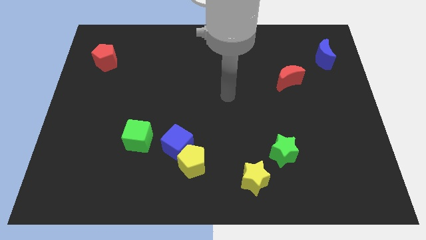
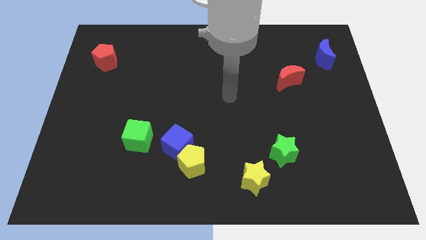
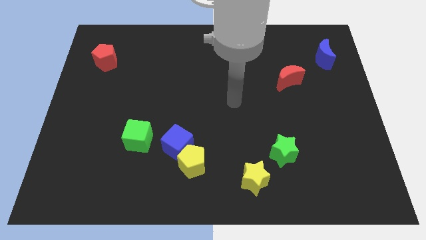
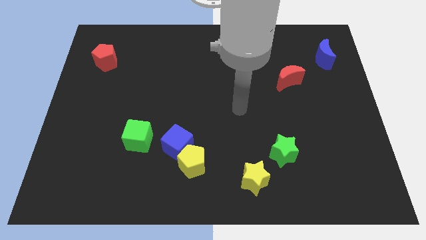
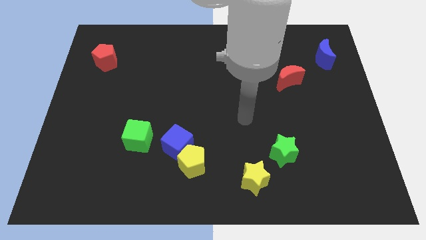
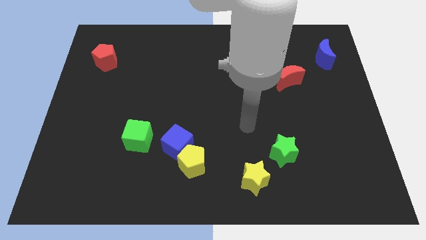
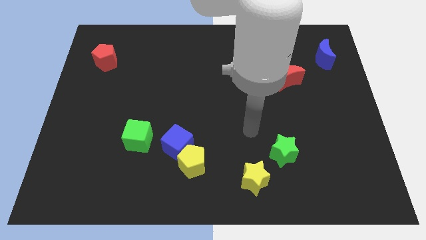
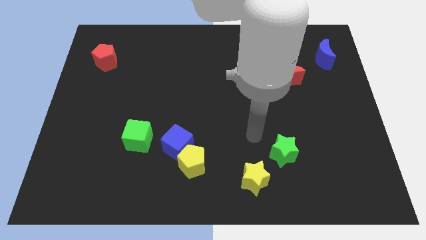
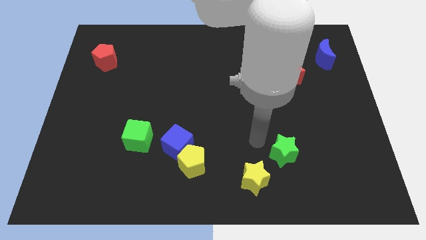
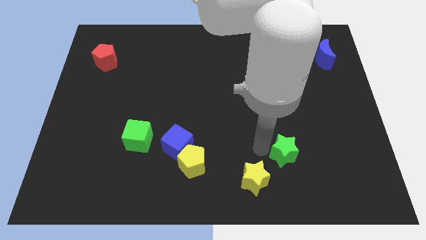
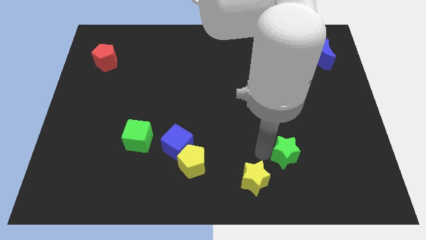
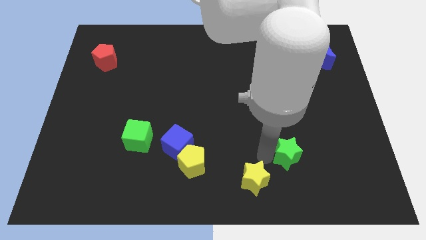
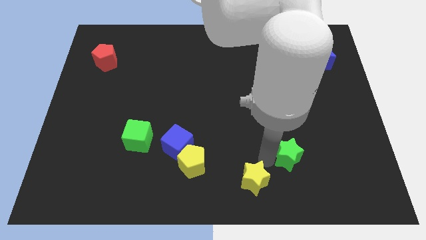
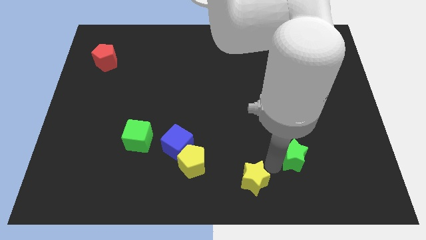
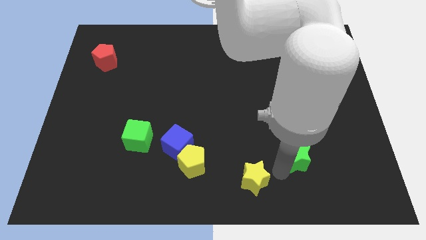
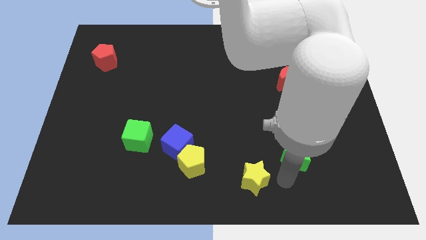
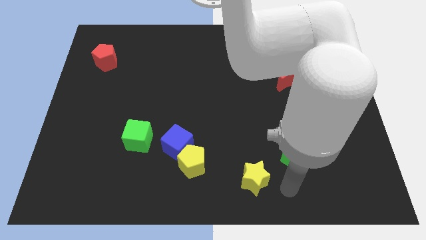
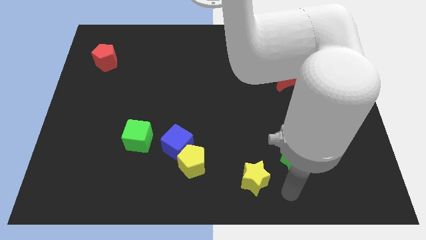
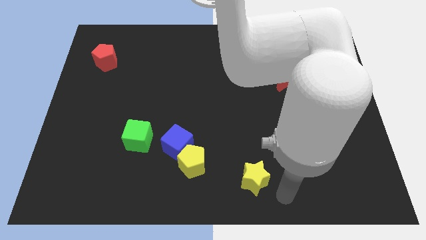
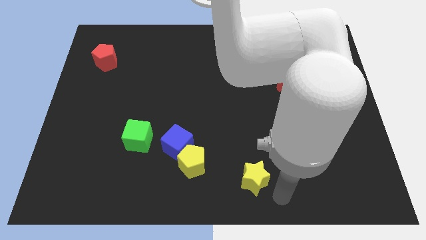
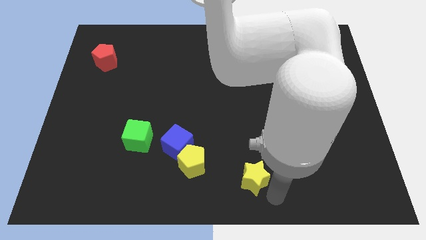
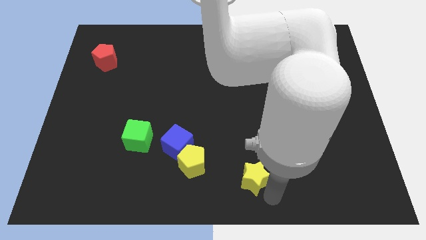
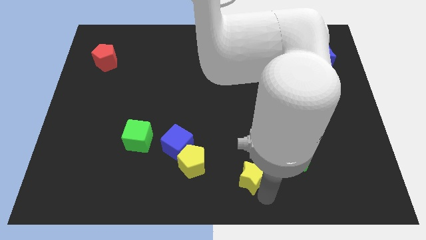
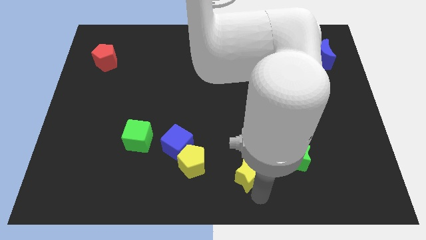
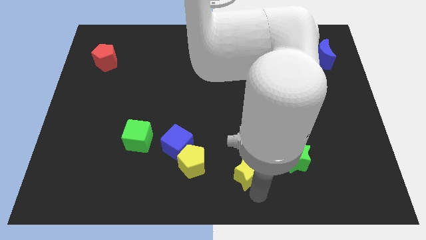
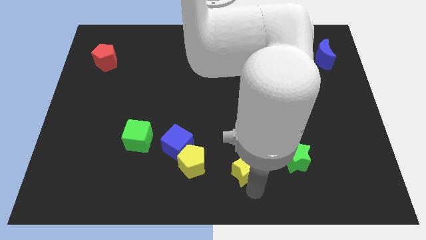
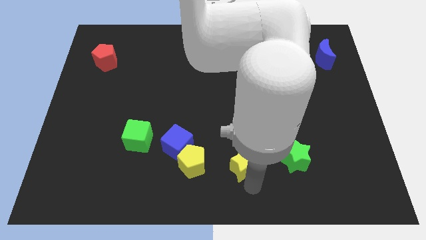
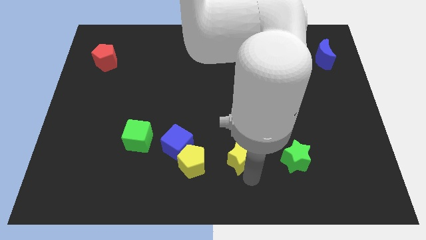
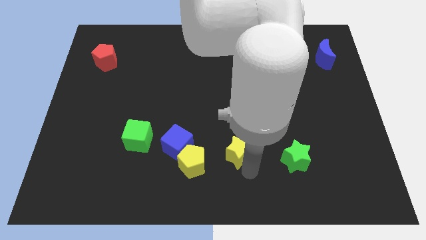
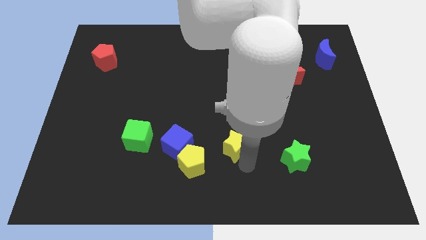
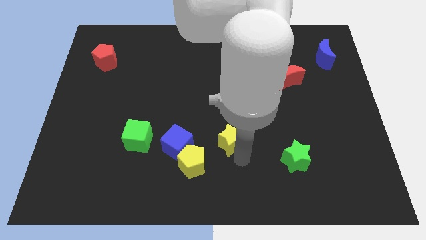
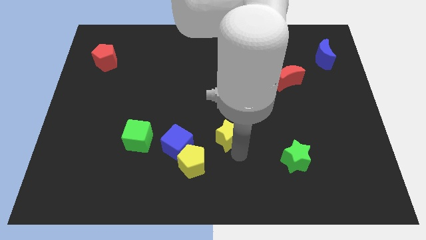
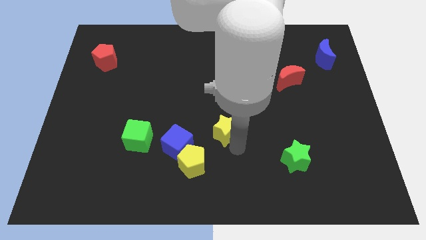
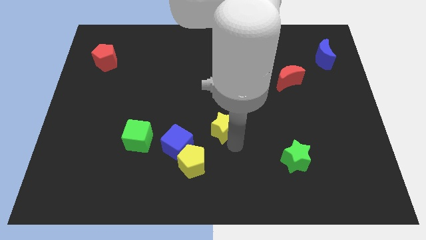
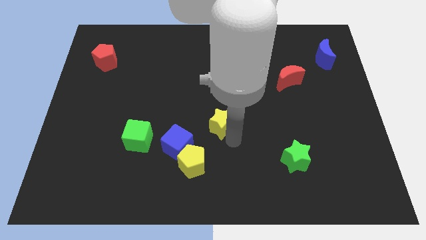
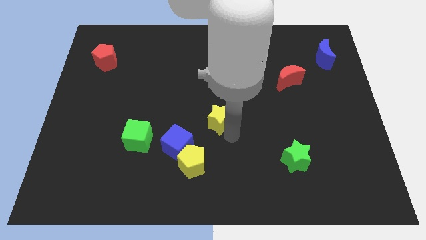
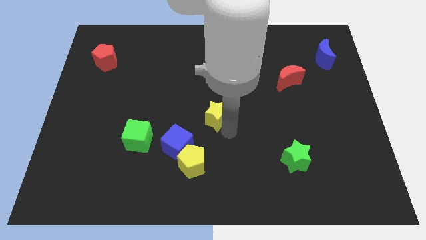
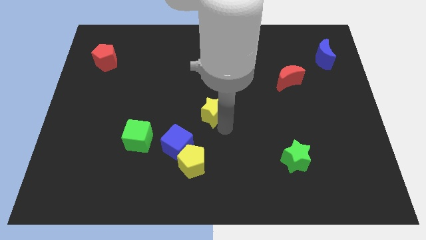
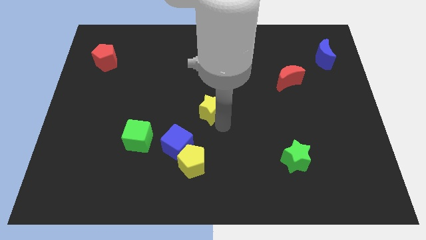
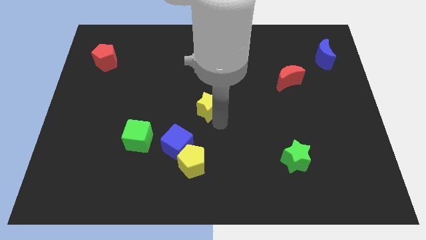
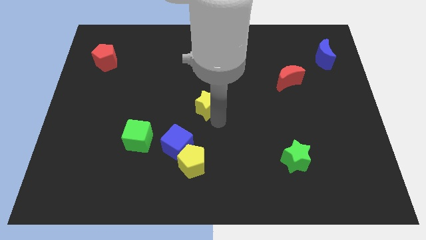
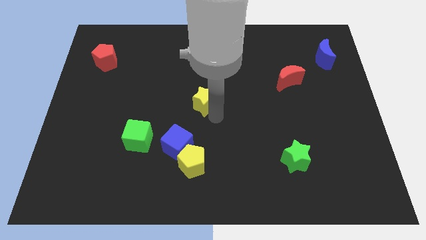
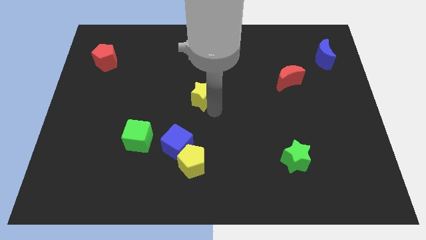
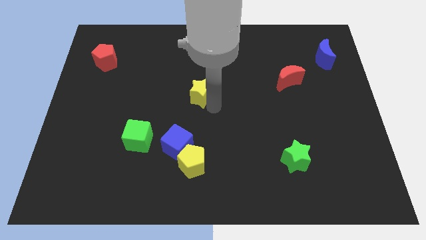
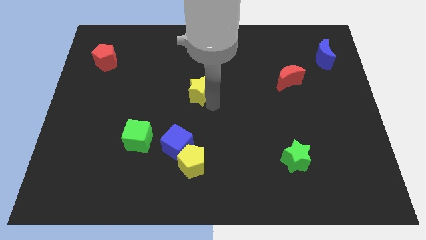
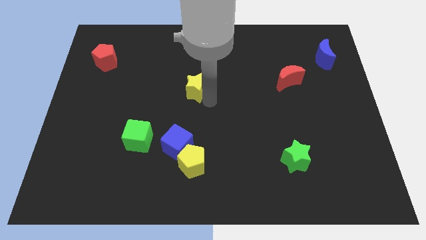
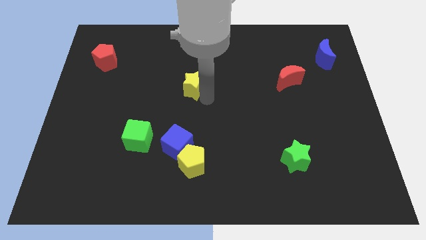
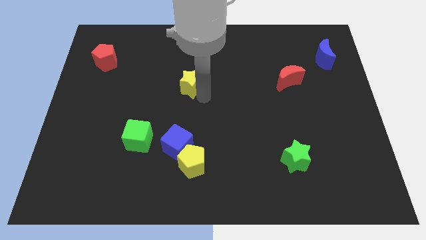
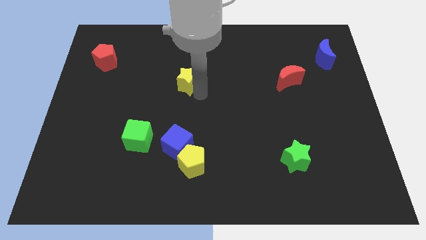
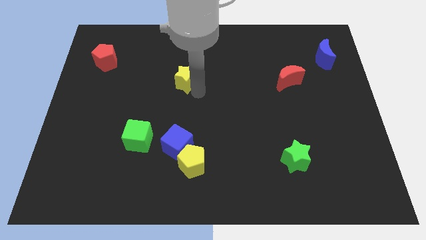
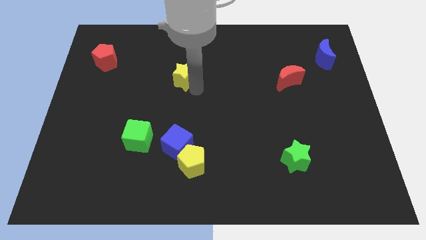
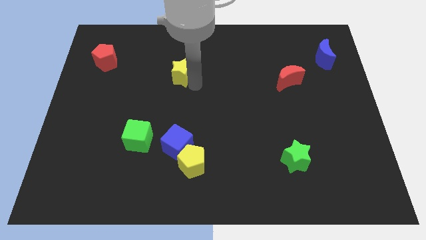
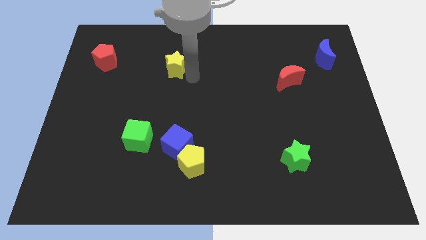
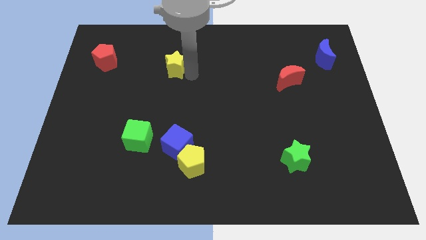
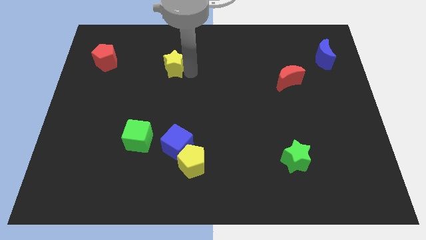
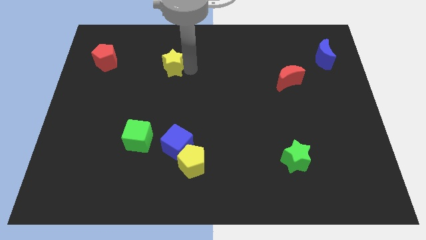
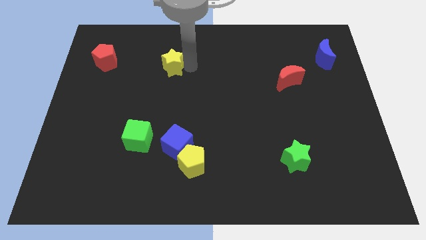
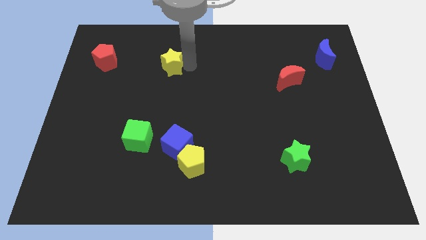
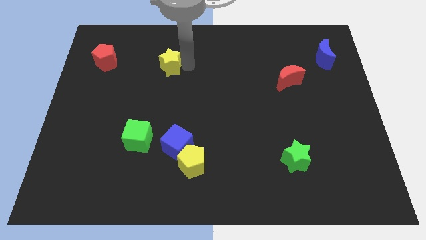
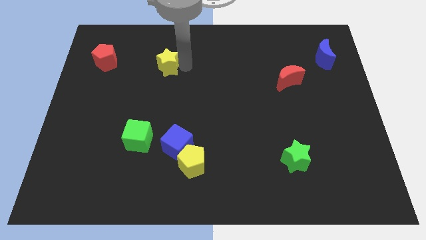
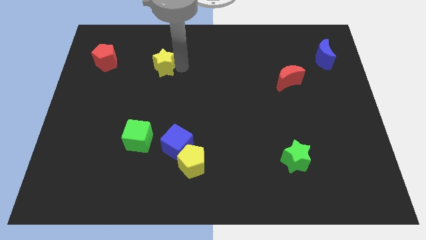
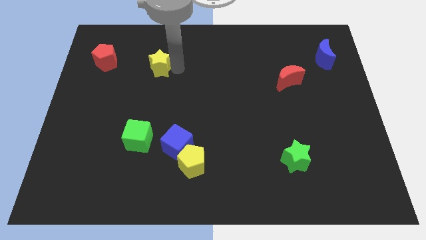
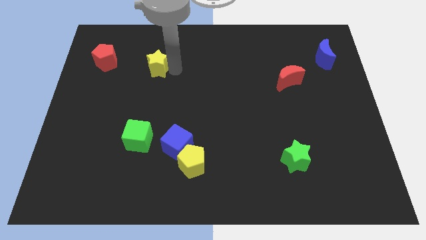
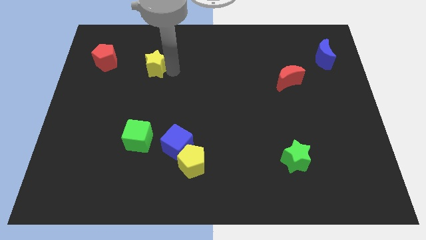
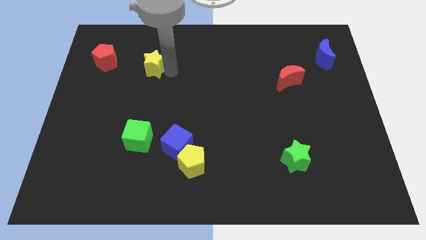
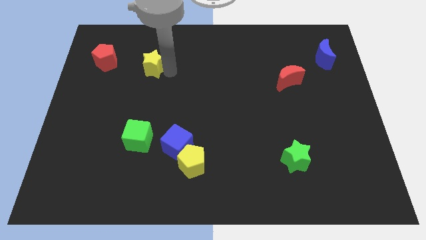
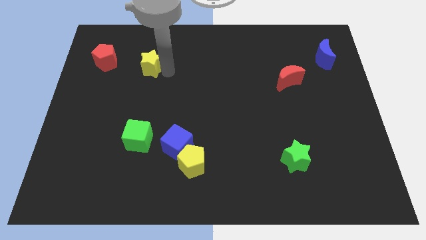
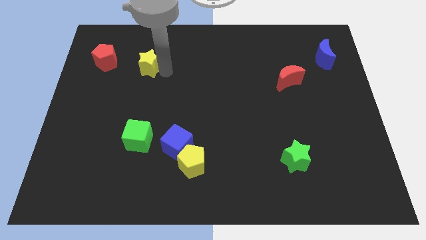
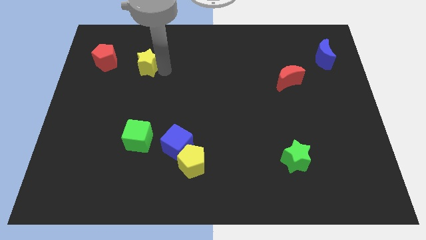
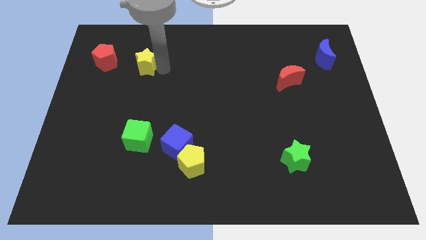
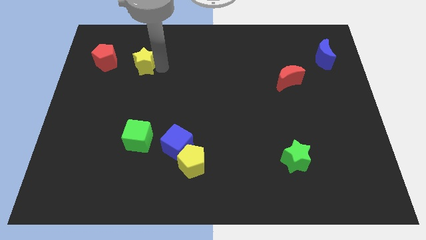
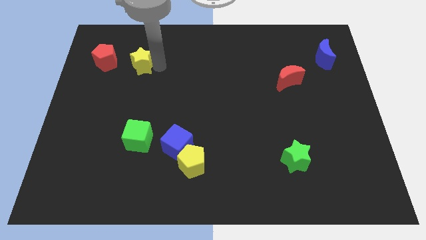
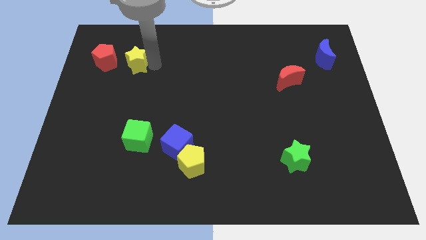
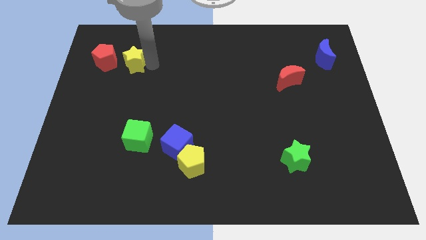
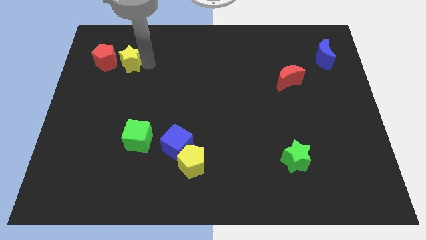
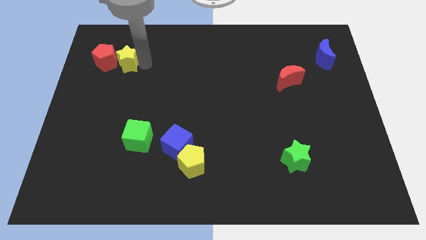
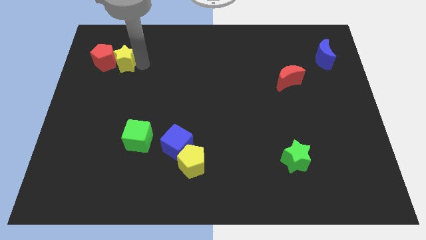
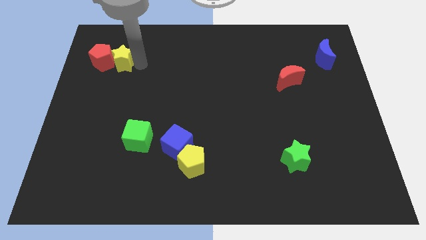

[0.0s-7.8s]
move the yellow star towards the red pentagon

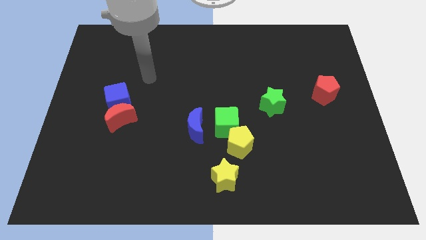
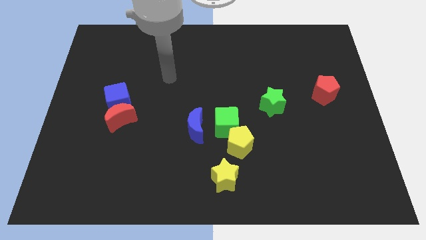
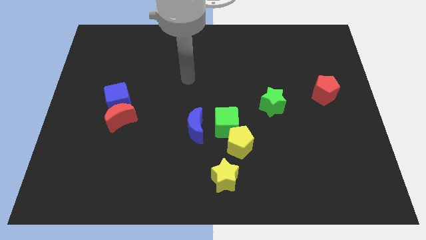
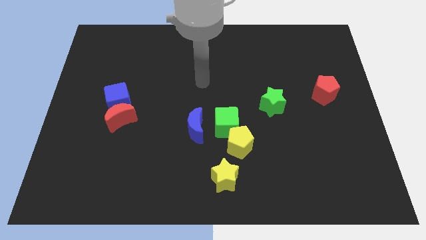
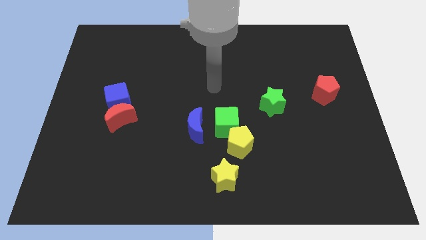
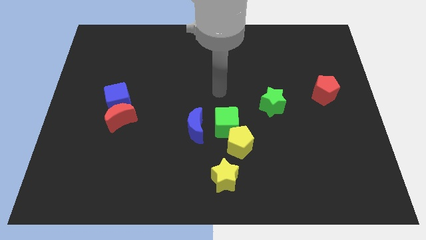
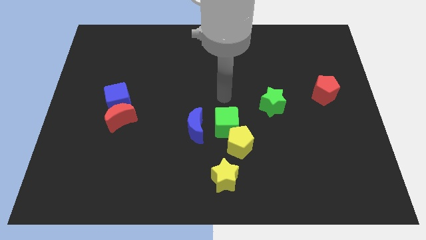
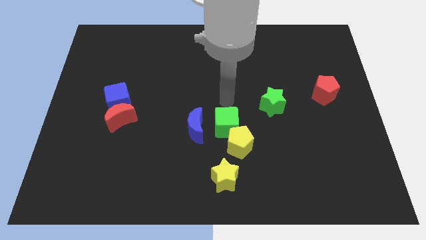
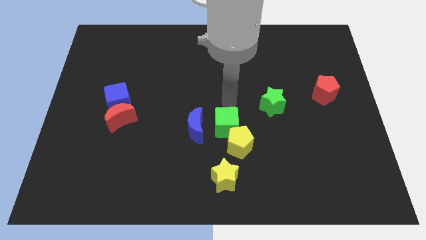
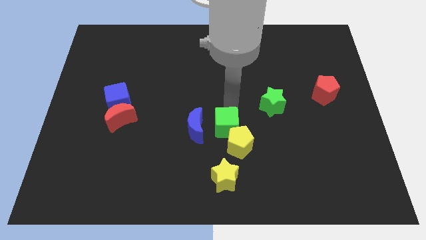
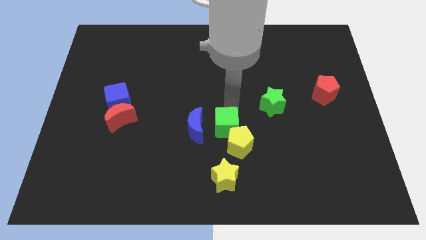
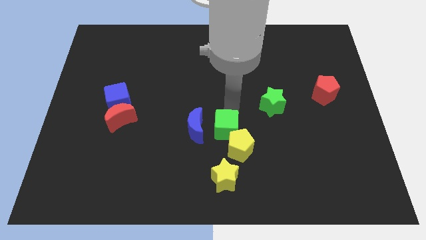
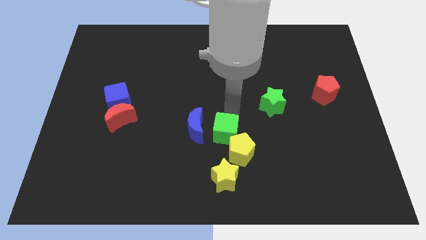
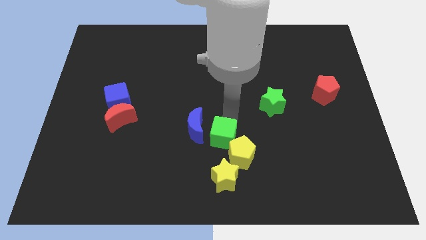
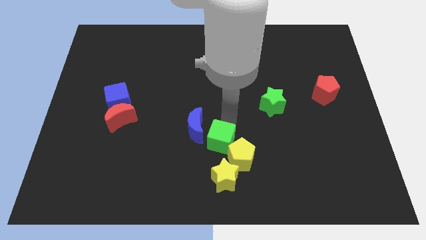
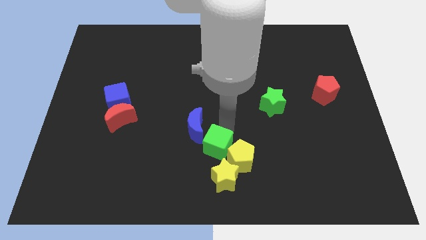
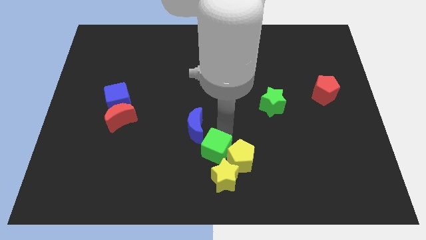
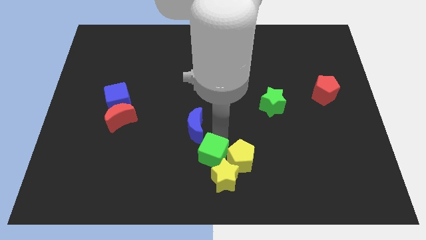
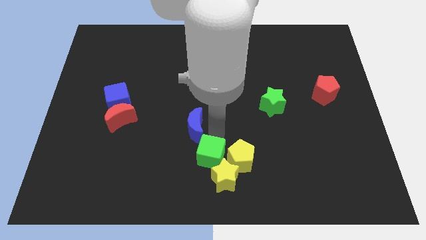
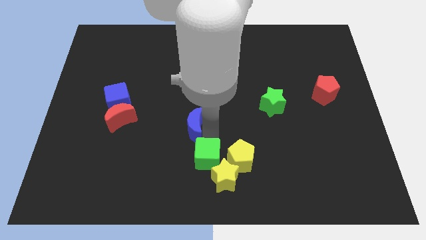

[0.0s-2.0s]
put the green cube to the yellow star
